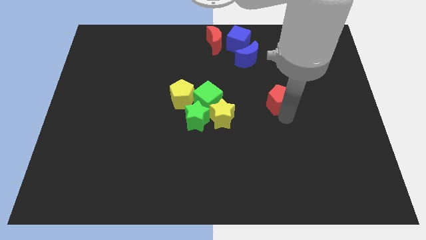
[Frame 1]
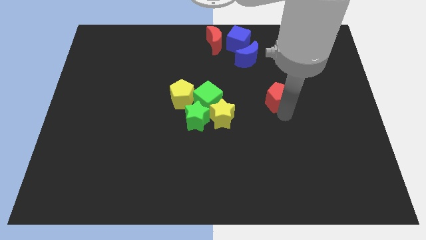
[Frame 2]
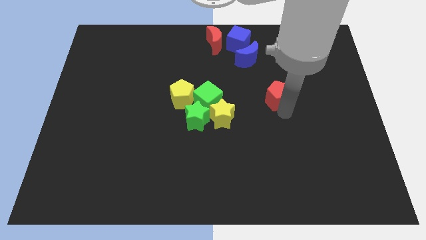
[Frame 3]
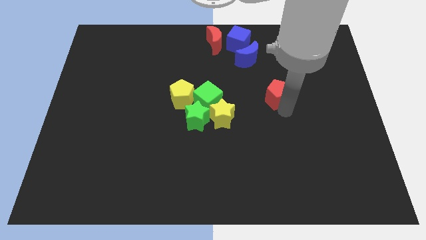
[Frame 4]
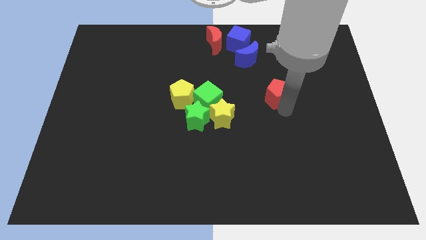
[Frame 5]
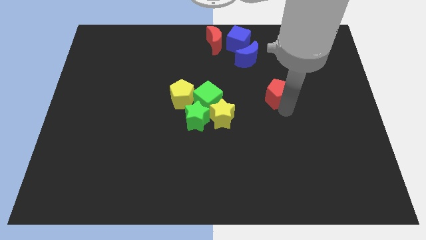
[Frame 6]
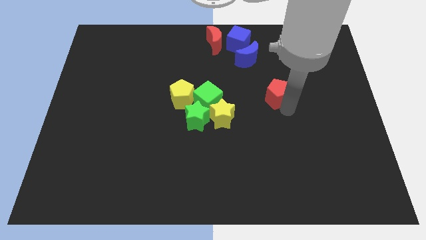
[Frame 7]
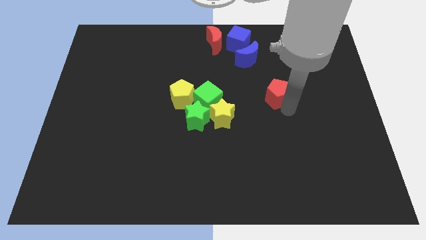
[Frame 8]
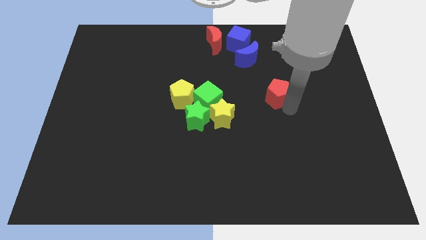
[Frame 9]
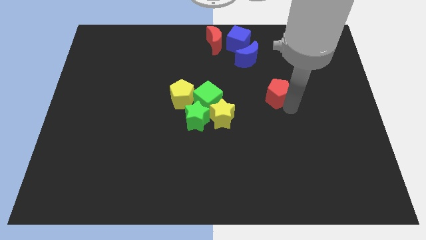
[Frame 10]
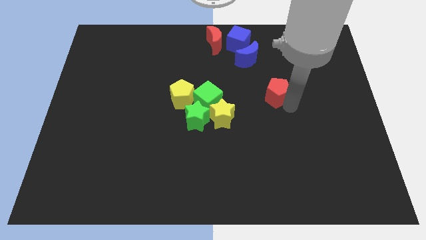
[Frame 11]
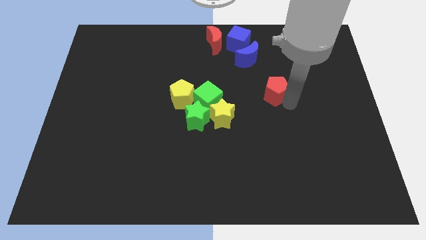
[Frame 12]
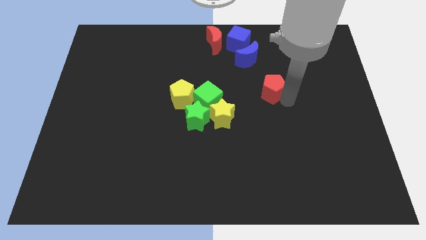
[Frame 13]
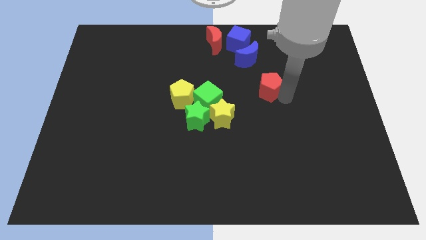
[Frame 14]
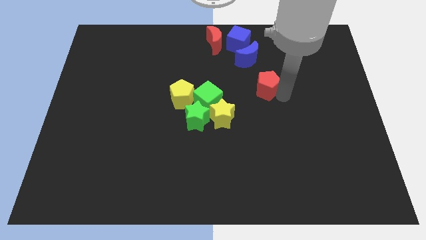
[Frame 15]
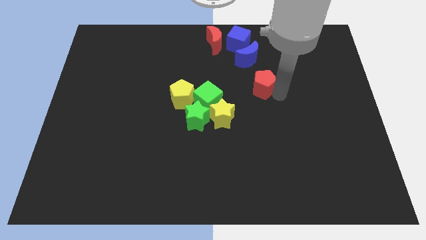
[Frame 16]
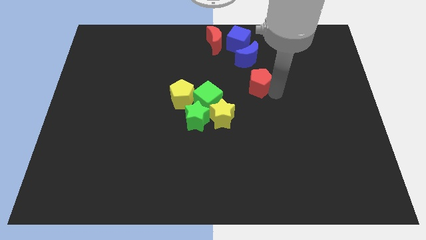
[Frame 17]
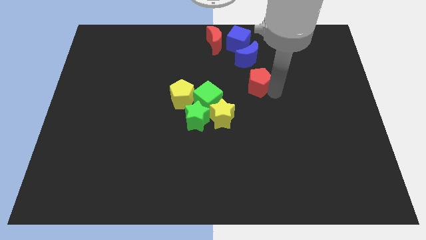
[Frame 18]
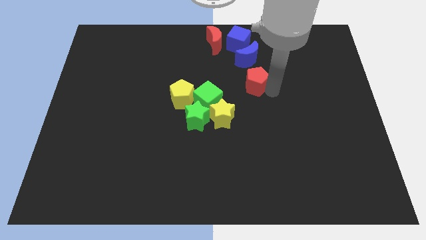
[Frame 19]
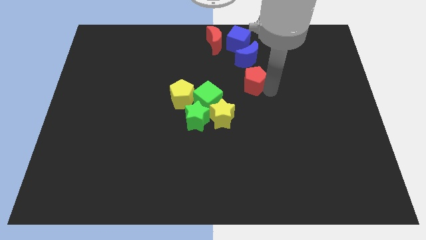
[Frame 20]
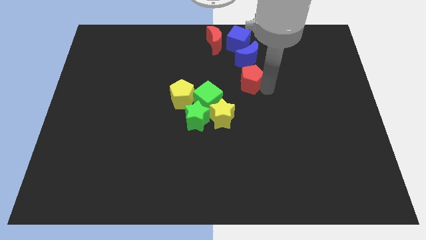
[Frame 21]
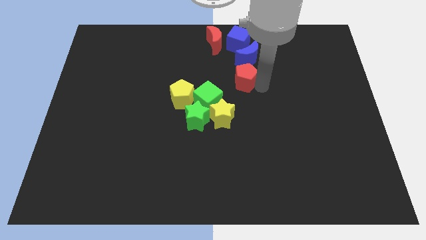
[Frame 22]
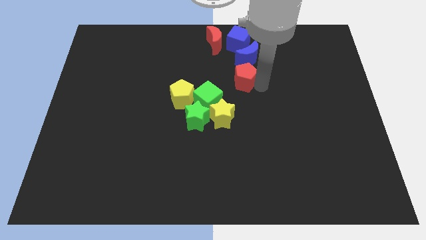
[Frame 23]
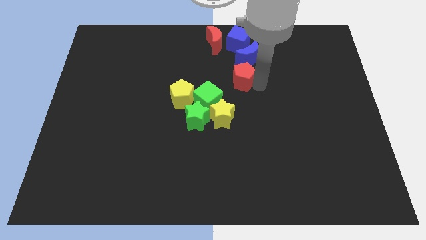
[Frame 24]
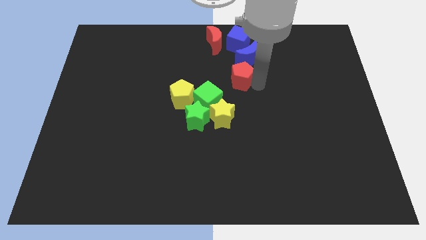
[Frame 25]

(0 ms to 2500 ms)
move the red pentagon under to the blue crescent

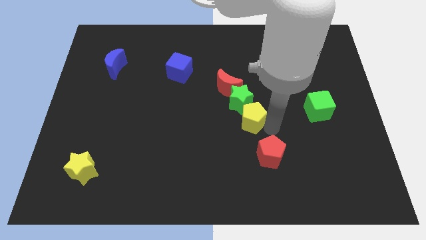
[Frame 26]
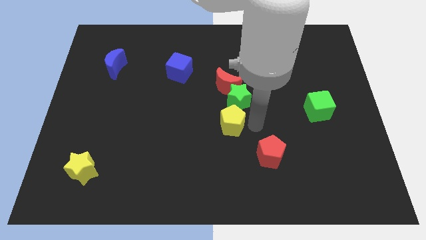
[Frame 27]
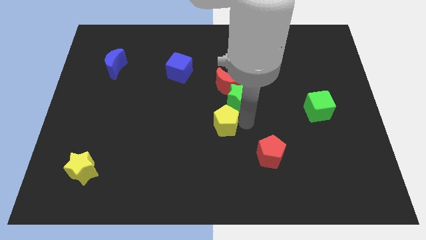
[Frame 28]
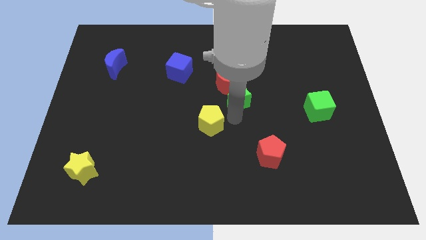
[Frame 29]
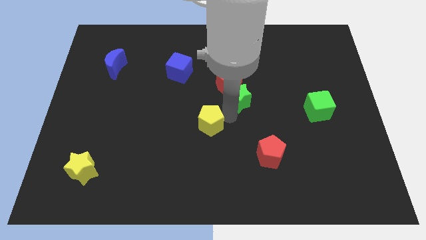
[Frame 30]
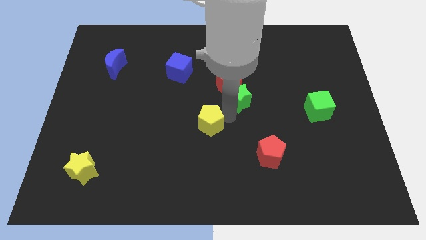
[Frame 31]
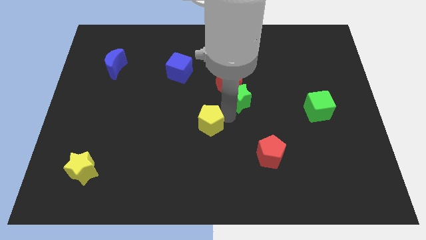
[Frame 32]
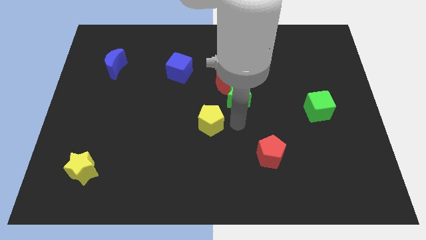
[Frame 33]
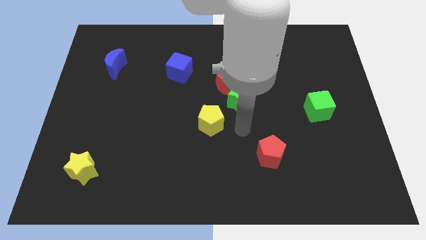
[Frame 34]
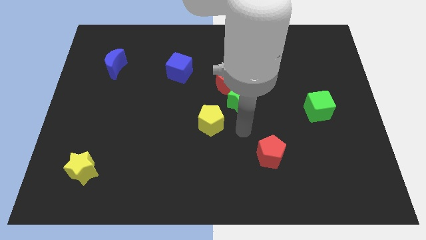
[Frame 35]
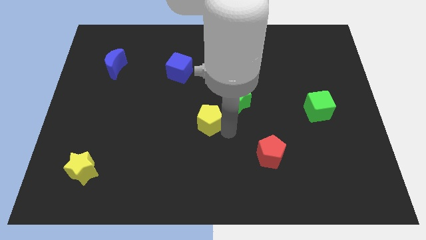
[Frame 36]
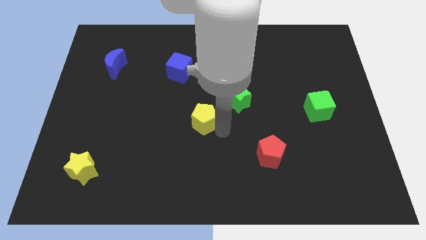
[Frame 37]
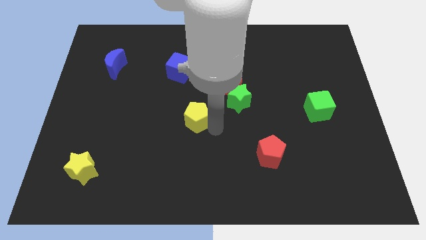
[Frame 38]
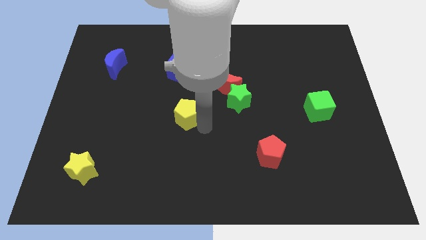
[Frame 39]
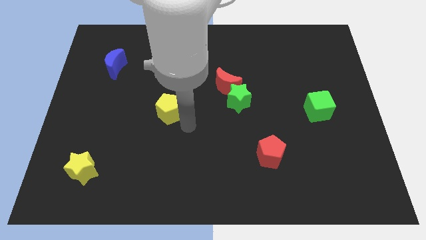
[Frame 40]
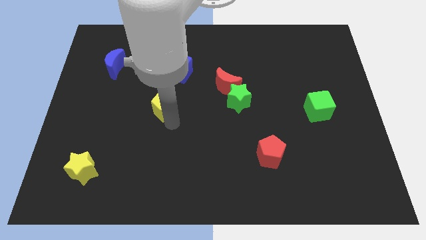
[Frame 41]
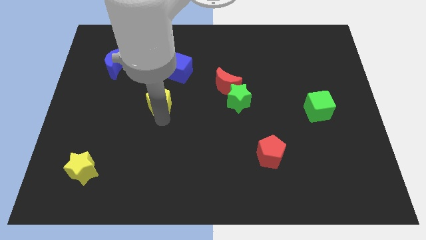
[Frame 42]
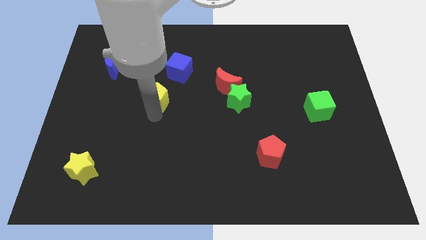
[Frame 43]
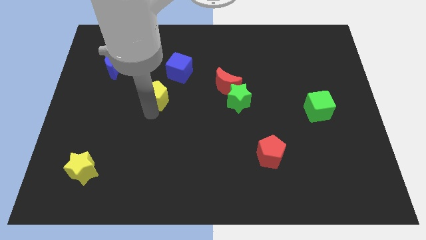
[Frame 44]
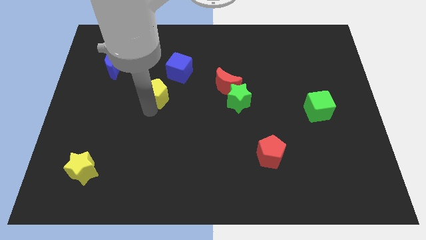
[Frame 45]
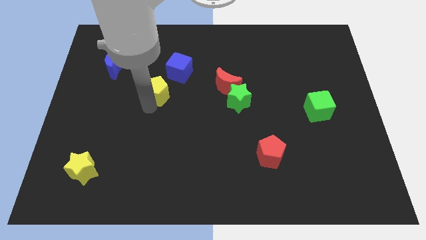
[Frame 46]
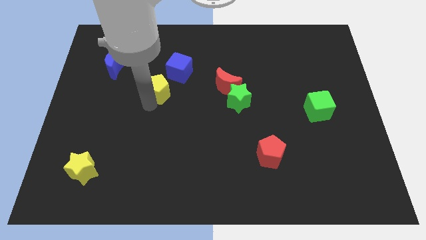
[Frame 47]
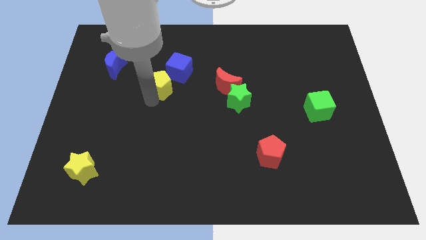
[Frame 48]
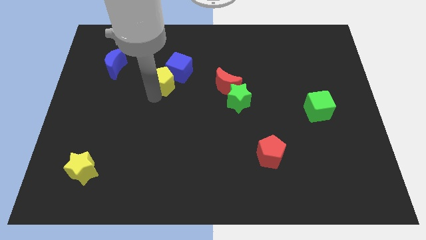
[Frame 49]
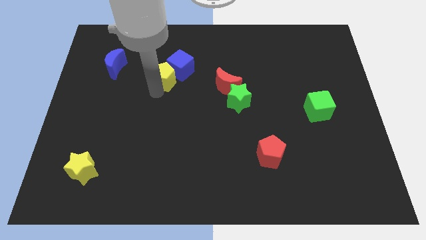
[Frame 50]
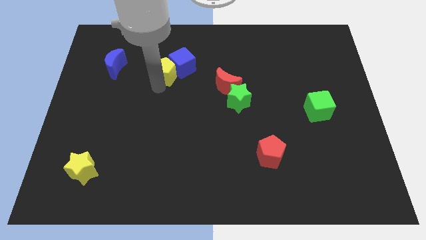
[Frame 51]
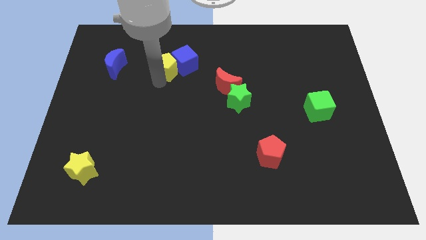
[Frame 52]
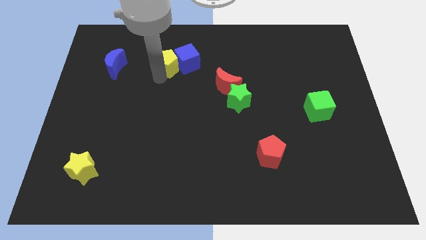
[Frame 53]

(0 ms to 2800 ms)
push the yellow pentagon next to the blue cube

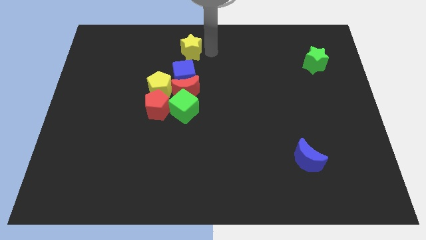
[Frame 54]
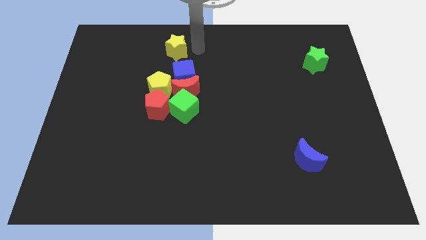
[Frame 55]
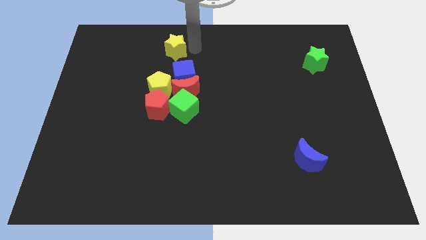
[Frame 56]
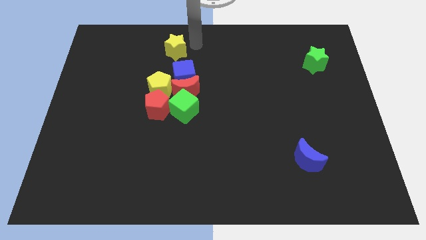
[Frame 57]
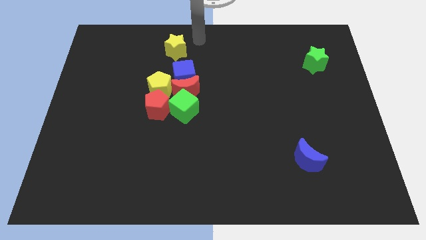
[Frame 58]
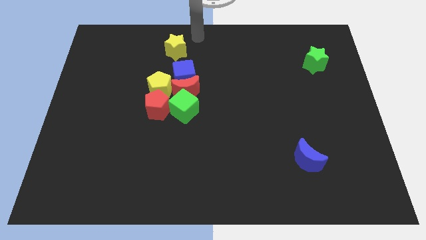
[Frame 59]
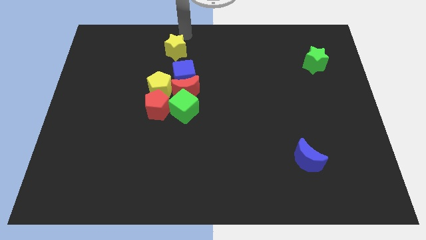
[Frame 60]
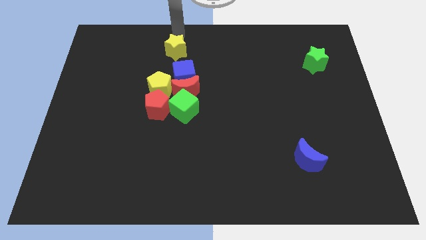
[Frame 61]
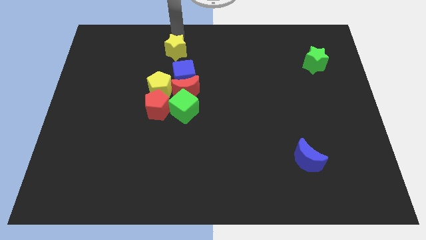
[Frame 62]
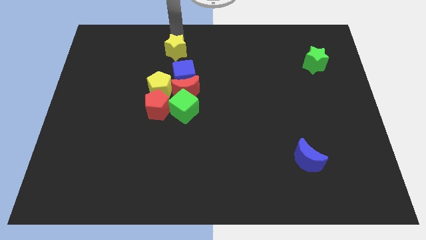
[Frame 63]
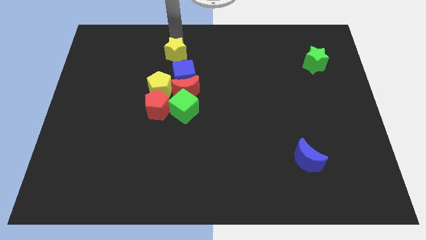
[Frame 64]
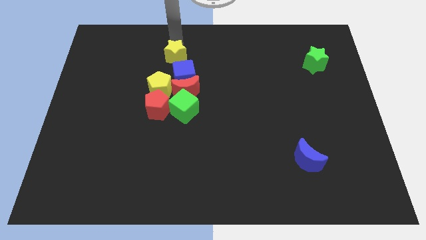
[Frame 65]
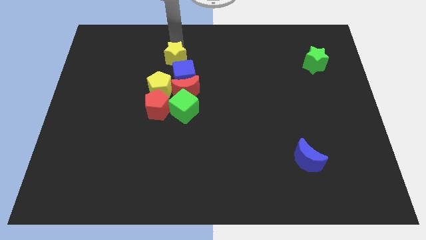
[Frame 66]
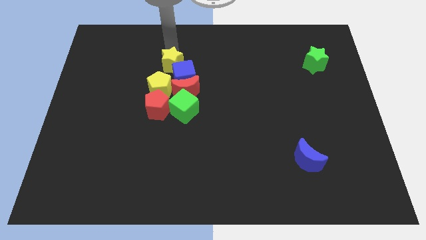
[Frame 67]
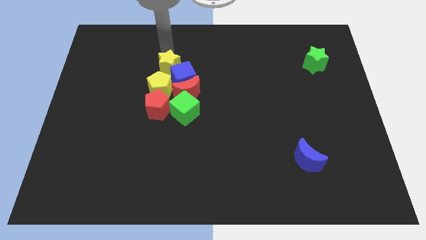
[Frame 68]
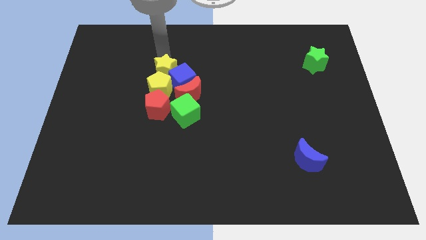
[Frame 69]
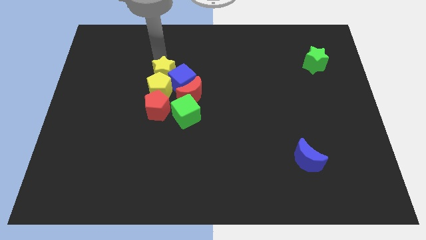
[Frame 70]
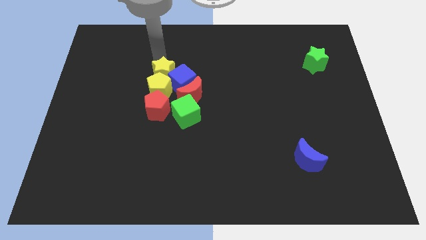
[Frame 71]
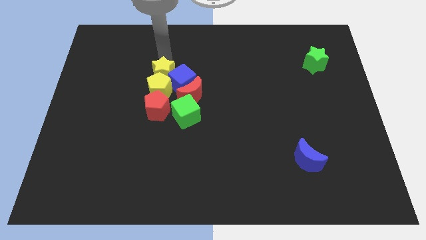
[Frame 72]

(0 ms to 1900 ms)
push the yellow star into the group of objects

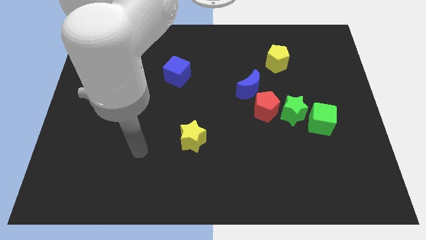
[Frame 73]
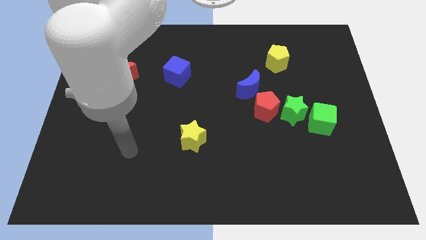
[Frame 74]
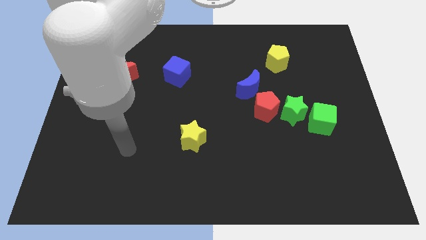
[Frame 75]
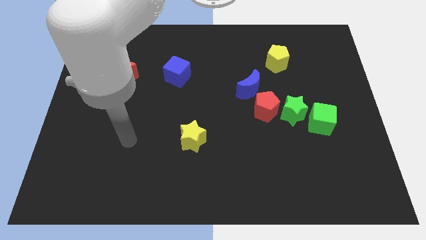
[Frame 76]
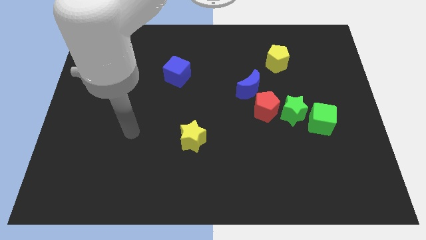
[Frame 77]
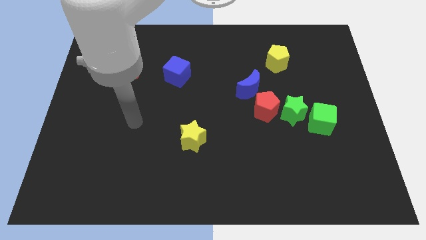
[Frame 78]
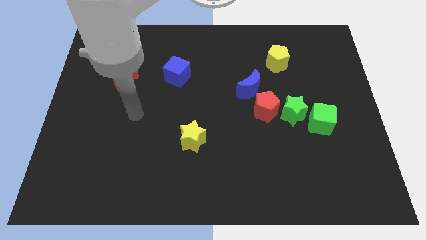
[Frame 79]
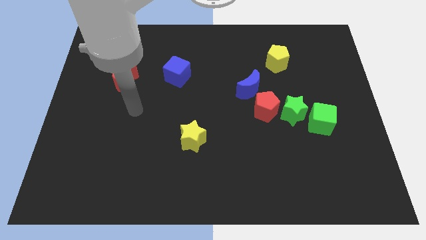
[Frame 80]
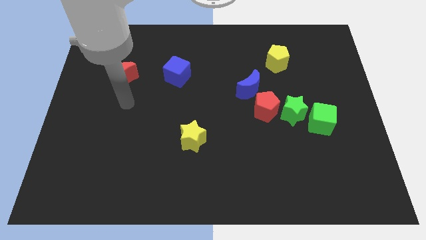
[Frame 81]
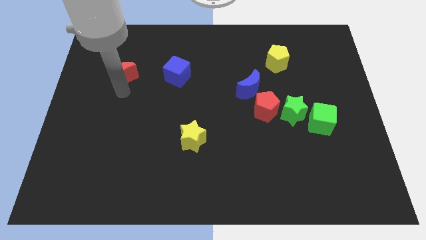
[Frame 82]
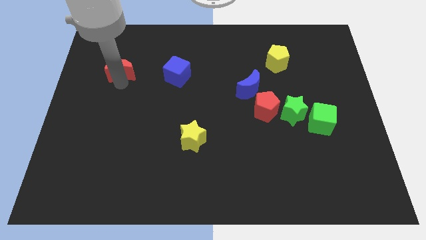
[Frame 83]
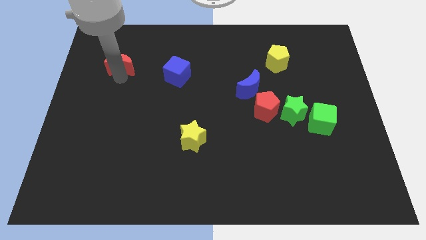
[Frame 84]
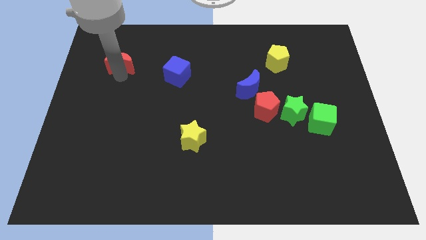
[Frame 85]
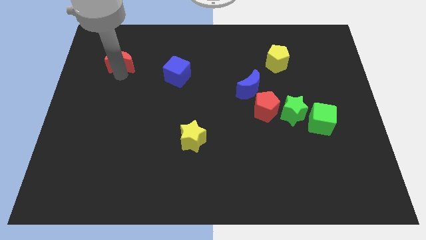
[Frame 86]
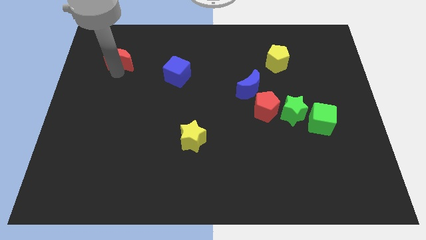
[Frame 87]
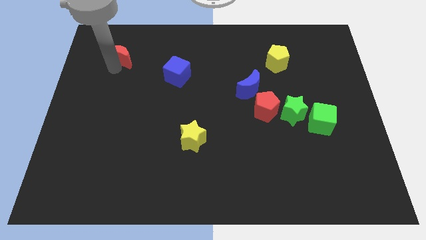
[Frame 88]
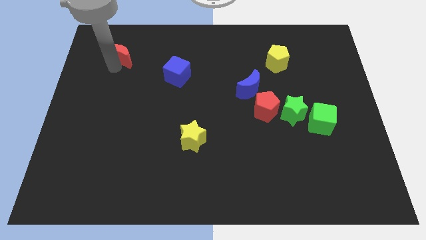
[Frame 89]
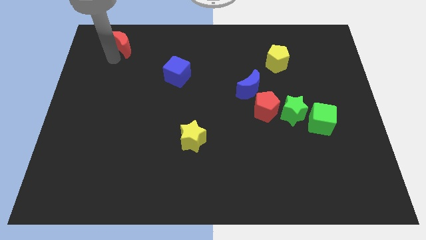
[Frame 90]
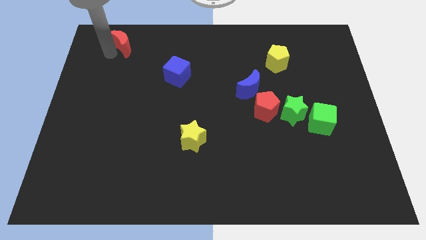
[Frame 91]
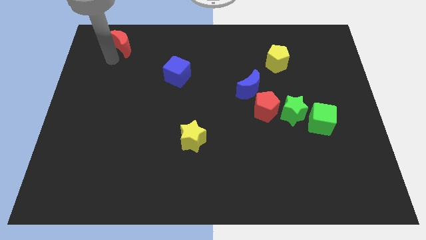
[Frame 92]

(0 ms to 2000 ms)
move the red crescent diagonal to the blue cube
